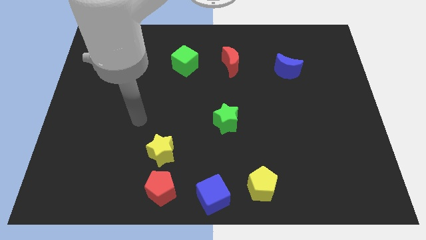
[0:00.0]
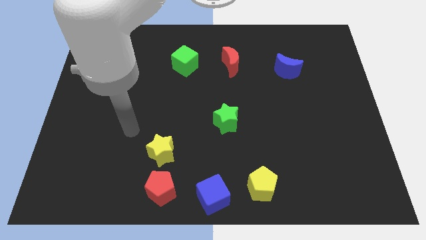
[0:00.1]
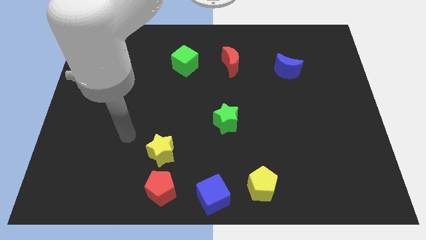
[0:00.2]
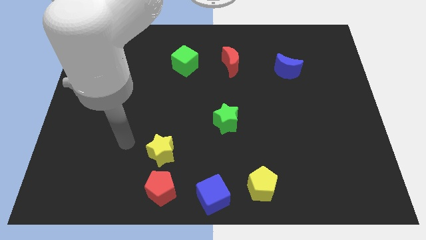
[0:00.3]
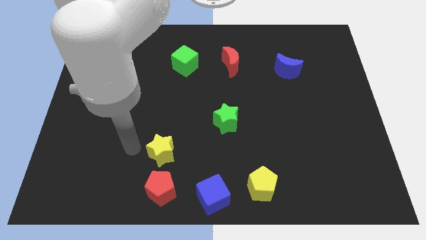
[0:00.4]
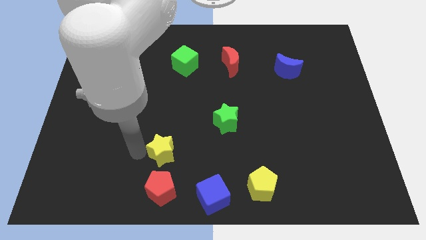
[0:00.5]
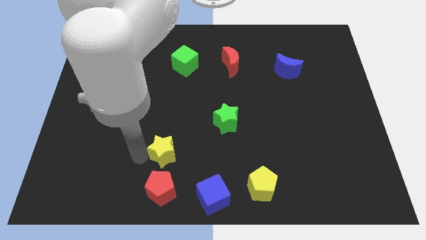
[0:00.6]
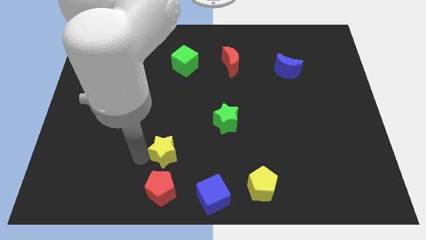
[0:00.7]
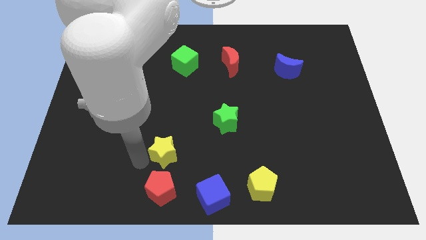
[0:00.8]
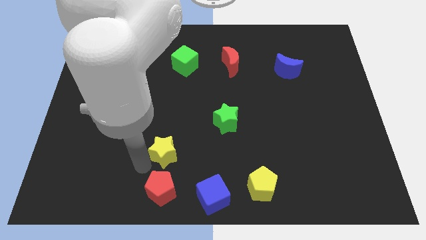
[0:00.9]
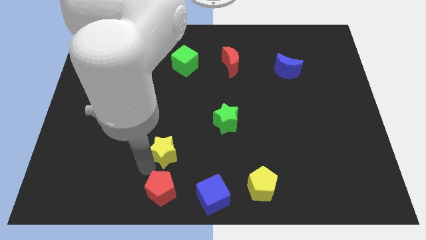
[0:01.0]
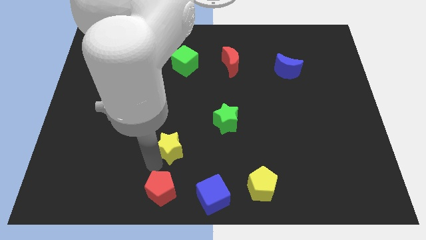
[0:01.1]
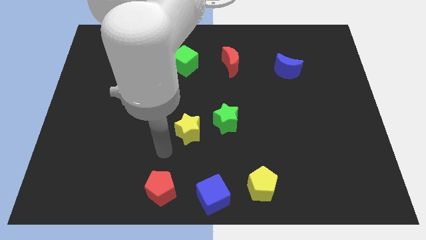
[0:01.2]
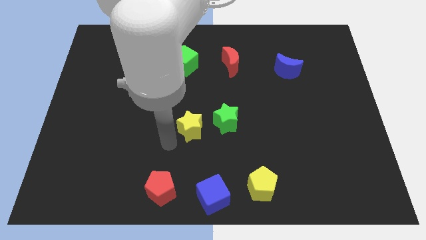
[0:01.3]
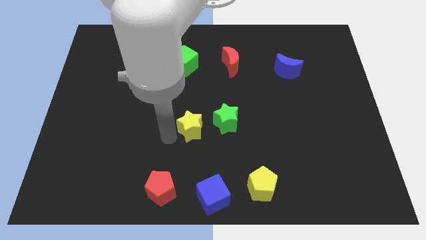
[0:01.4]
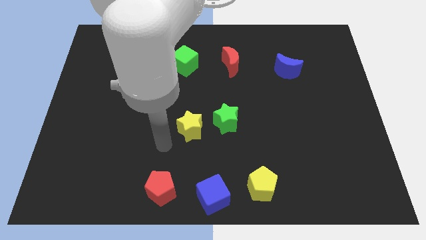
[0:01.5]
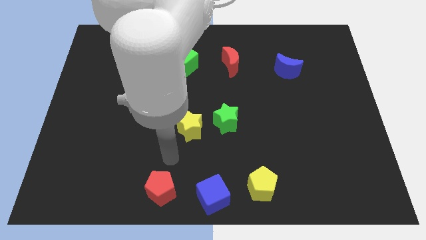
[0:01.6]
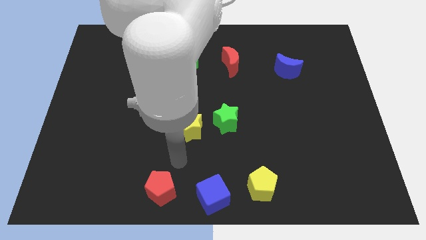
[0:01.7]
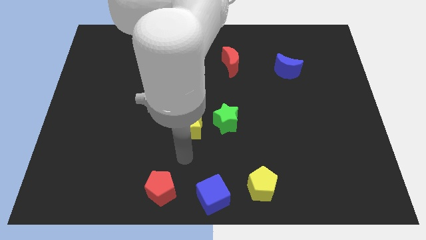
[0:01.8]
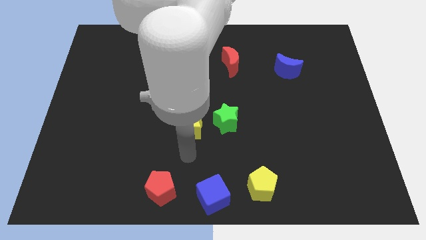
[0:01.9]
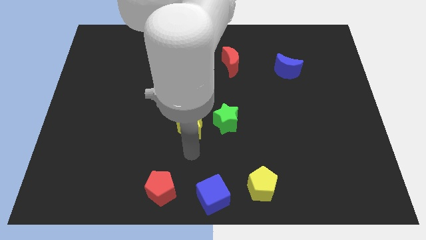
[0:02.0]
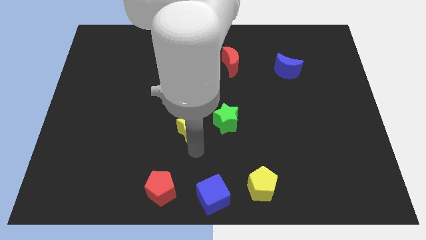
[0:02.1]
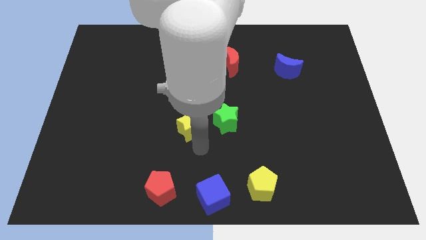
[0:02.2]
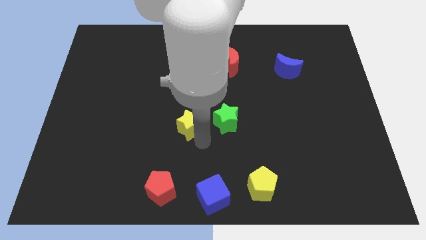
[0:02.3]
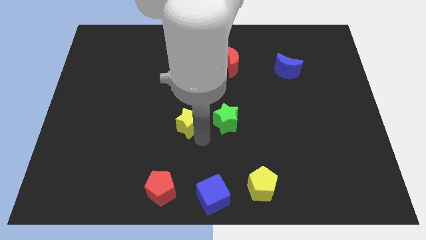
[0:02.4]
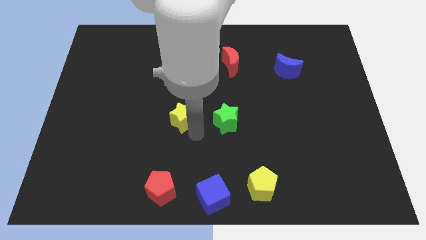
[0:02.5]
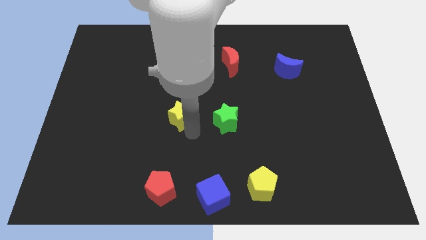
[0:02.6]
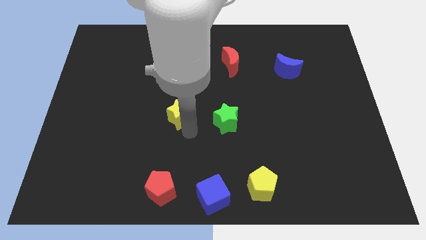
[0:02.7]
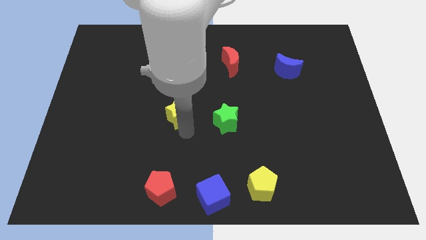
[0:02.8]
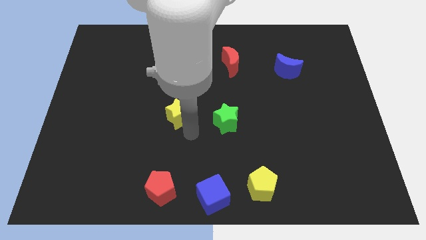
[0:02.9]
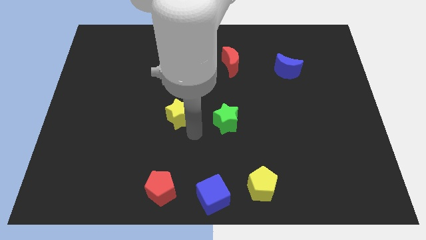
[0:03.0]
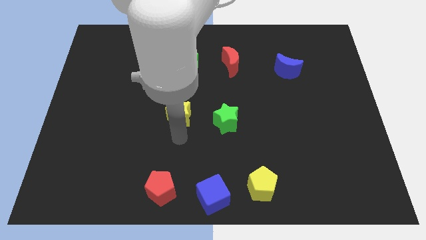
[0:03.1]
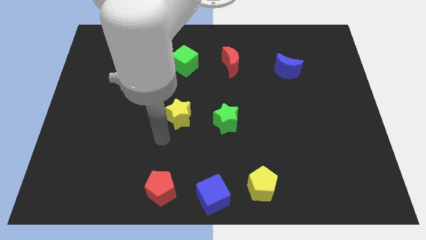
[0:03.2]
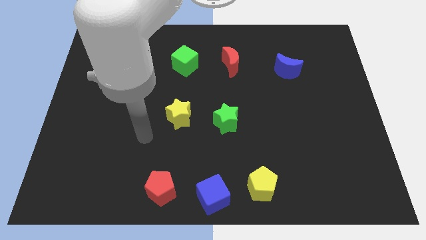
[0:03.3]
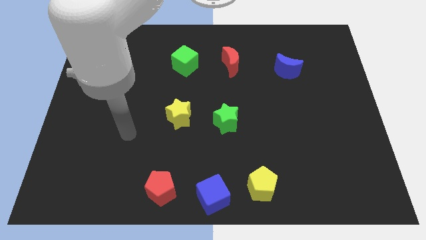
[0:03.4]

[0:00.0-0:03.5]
place yellow star to the left of green star

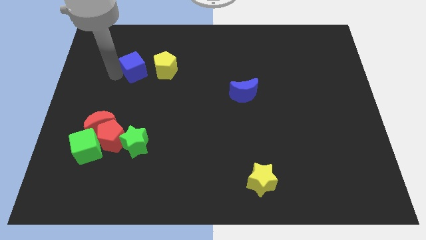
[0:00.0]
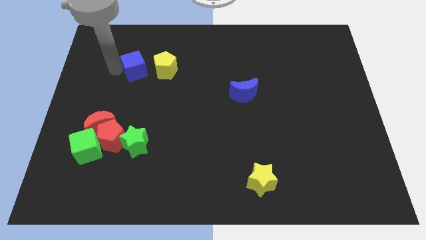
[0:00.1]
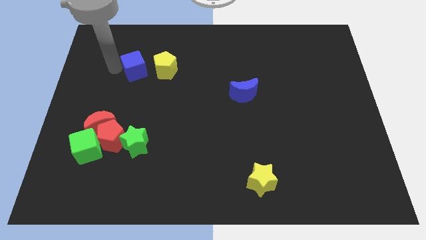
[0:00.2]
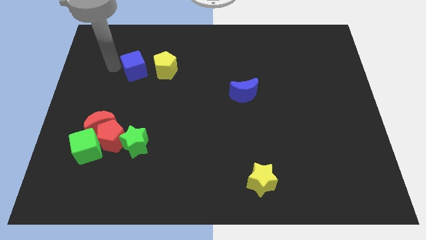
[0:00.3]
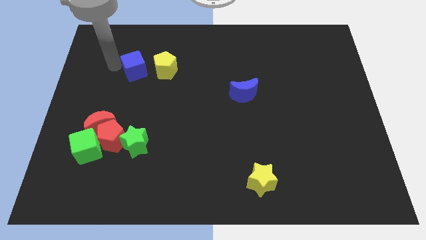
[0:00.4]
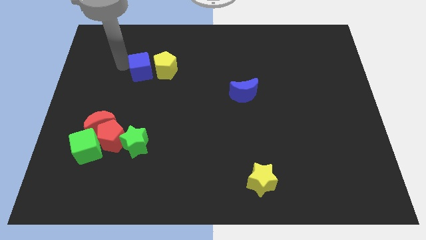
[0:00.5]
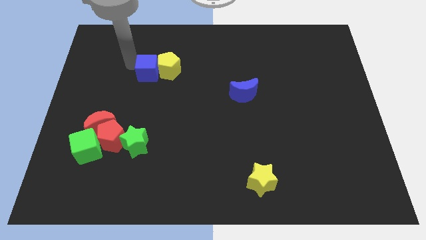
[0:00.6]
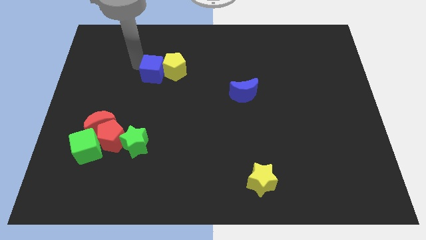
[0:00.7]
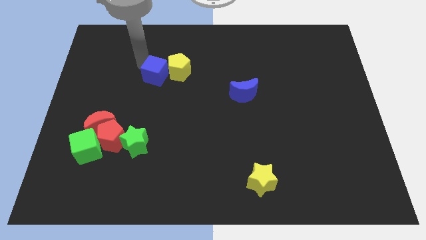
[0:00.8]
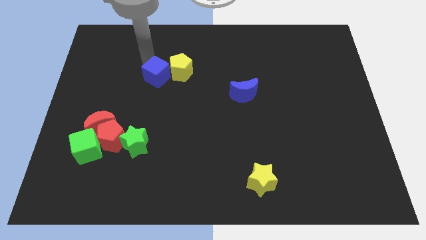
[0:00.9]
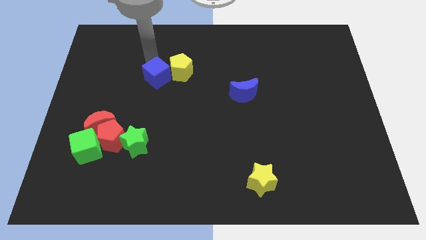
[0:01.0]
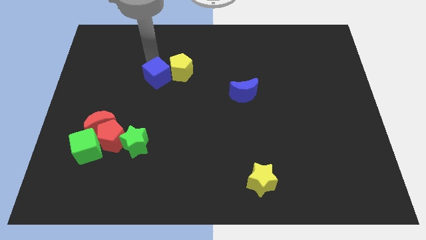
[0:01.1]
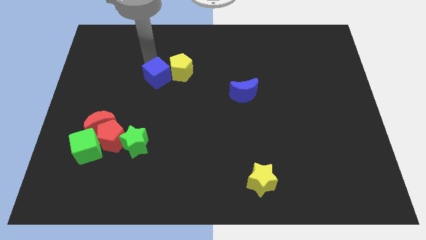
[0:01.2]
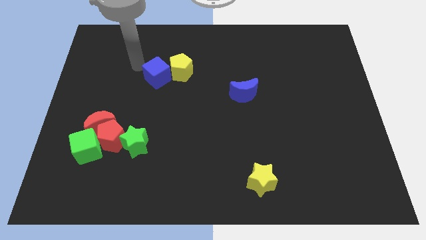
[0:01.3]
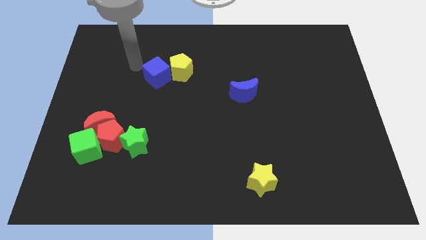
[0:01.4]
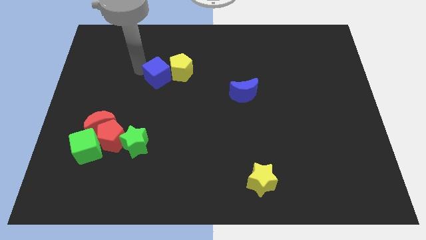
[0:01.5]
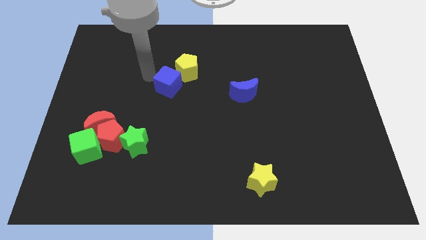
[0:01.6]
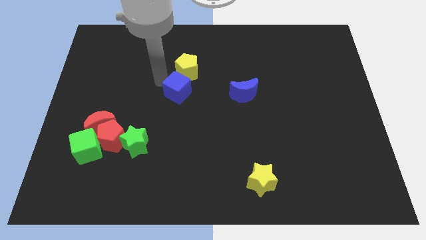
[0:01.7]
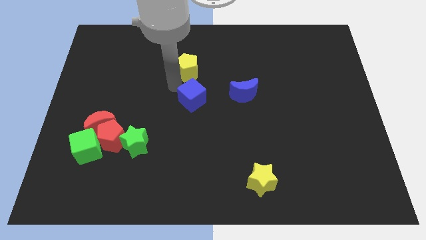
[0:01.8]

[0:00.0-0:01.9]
slide the blue cube to the left of blue crescent

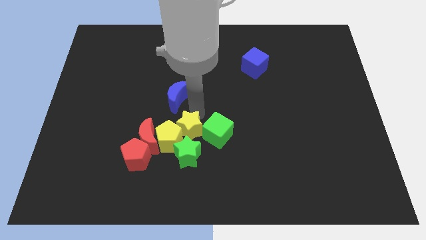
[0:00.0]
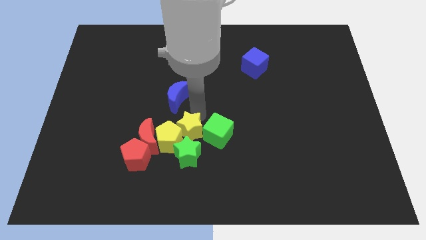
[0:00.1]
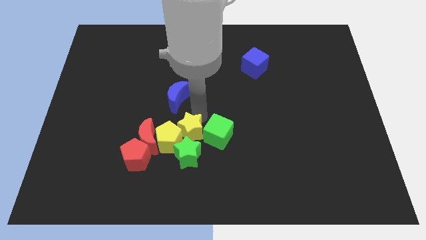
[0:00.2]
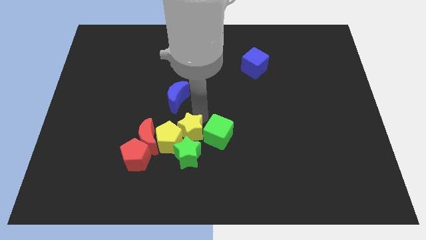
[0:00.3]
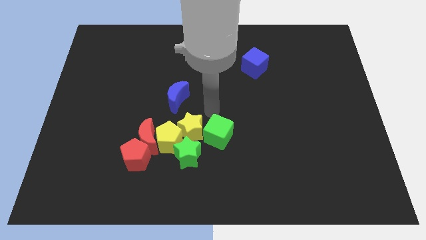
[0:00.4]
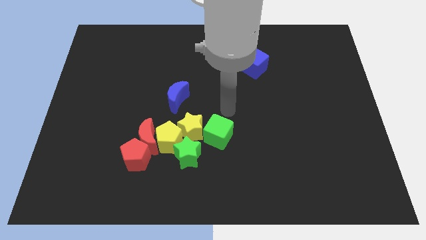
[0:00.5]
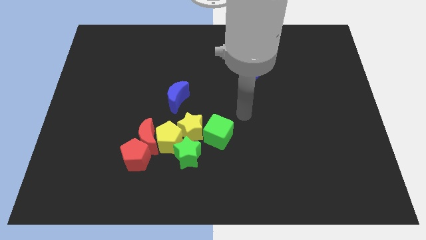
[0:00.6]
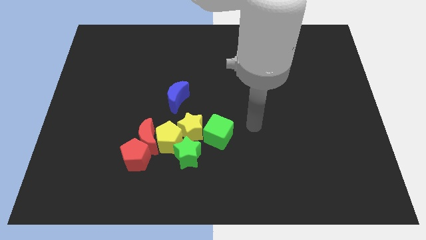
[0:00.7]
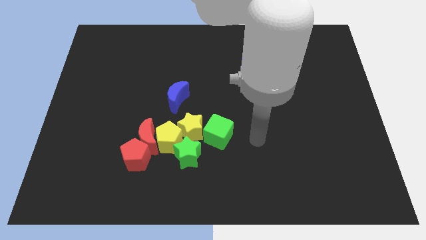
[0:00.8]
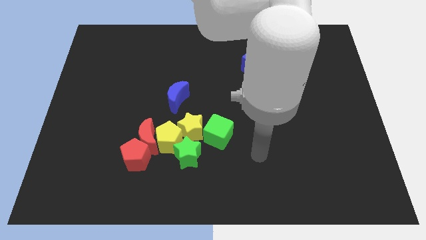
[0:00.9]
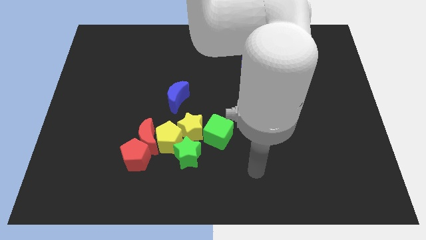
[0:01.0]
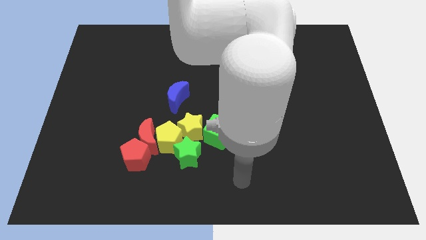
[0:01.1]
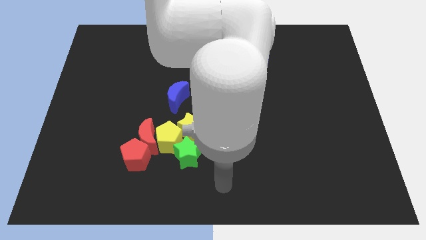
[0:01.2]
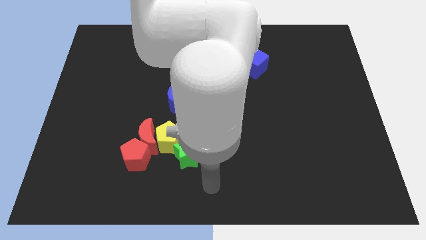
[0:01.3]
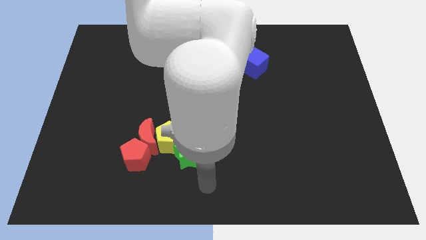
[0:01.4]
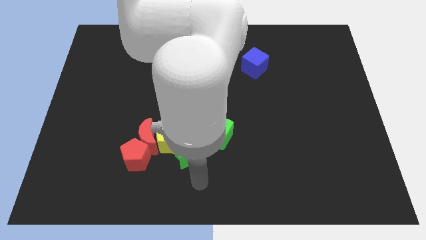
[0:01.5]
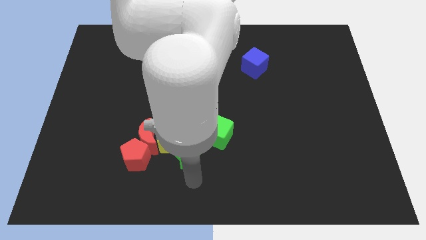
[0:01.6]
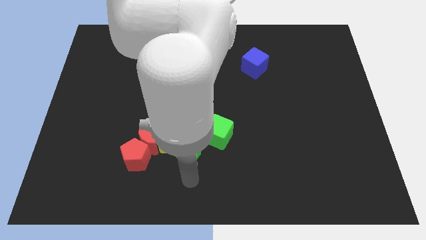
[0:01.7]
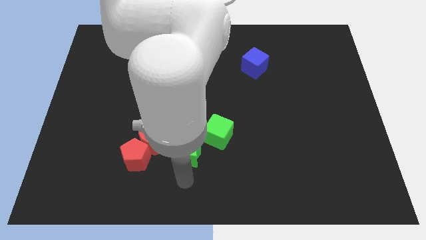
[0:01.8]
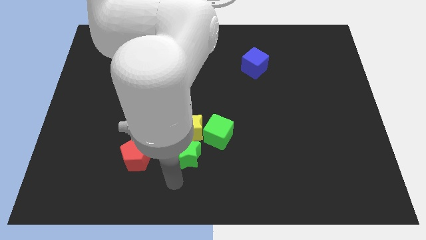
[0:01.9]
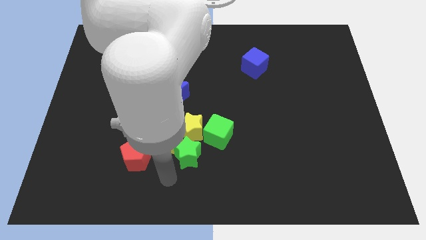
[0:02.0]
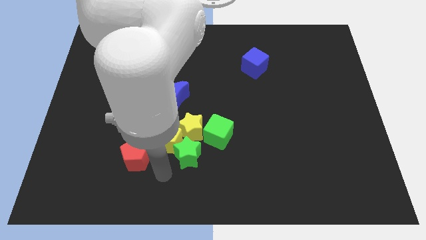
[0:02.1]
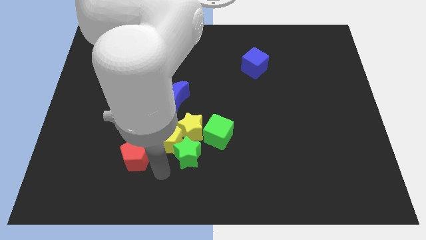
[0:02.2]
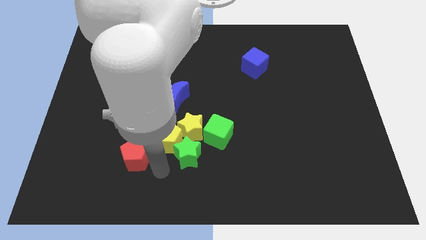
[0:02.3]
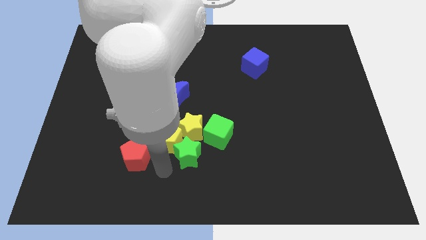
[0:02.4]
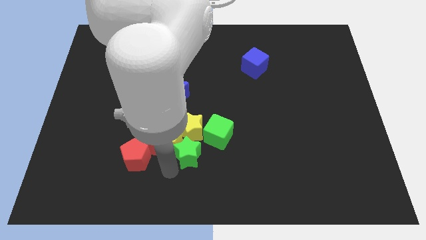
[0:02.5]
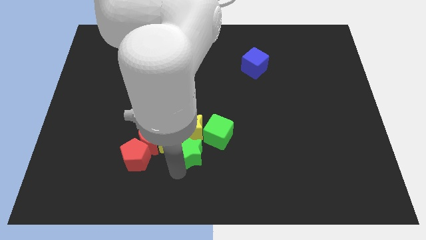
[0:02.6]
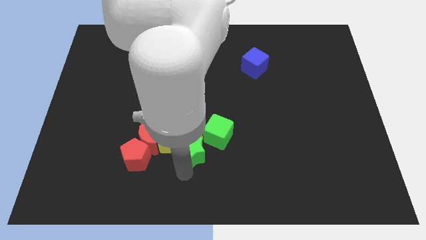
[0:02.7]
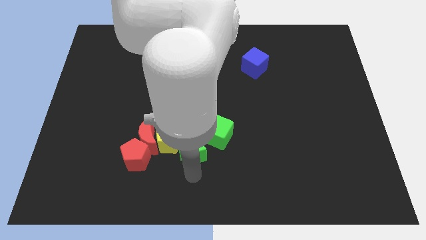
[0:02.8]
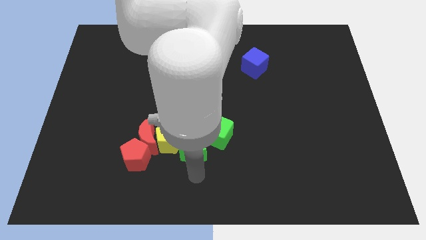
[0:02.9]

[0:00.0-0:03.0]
move your arm away from the yellow star

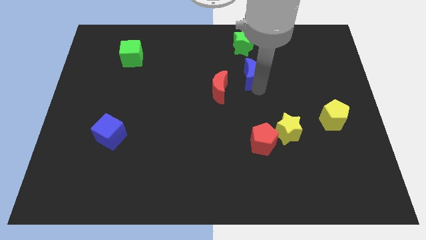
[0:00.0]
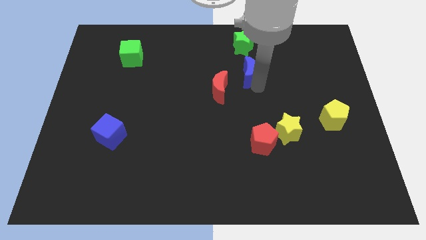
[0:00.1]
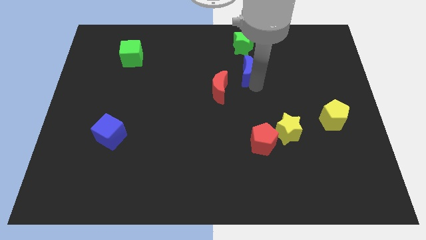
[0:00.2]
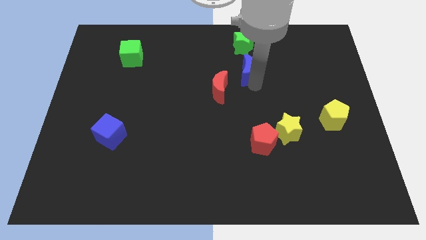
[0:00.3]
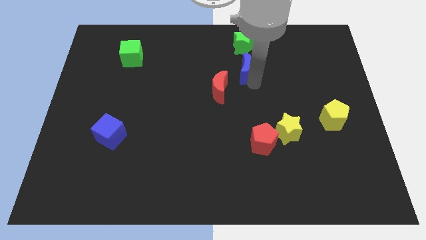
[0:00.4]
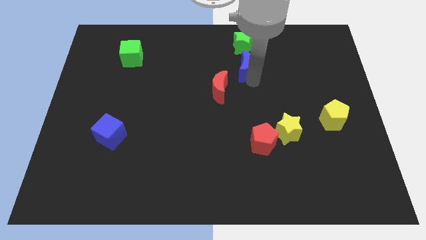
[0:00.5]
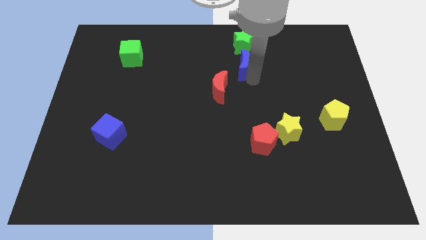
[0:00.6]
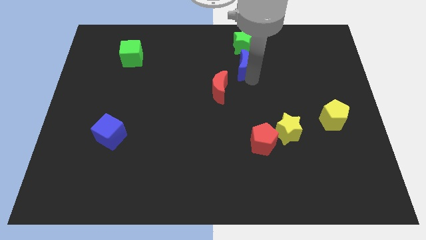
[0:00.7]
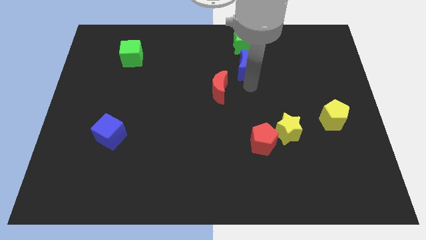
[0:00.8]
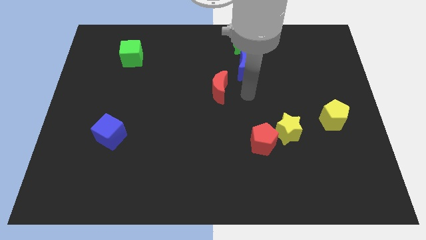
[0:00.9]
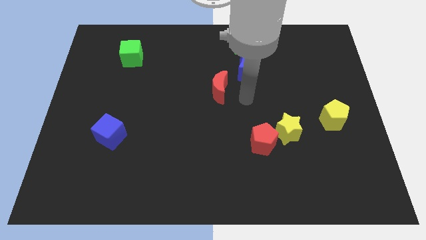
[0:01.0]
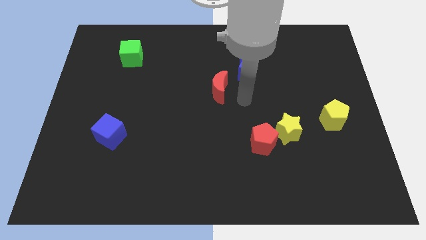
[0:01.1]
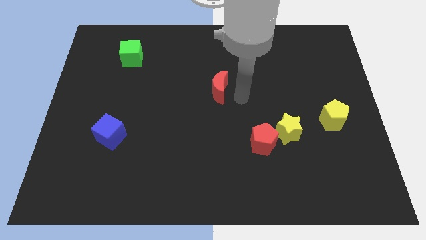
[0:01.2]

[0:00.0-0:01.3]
drag the blue moon and place it below the green star
